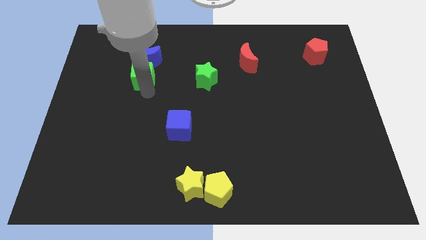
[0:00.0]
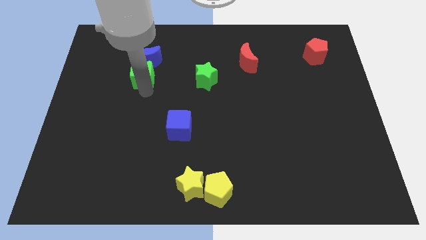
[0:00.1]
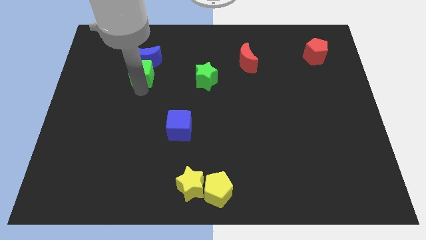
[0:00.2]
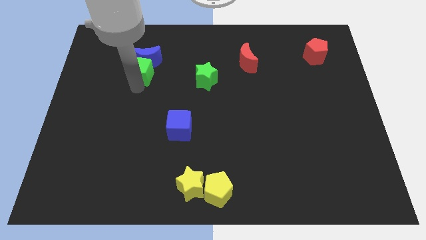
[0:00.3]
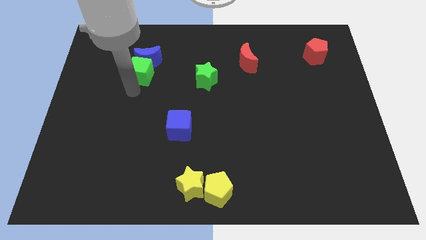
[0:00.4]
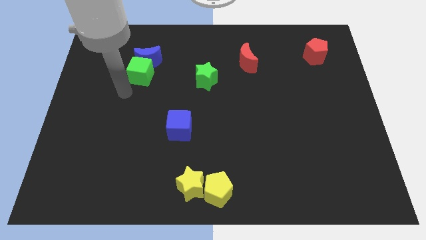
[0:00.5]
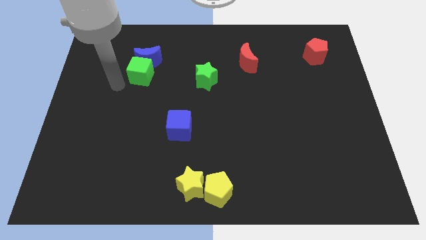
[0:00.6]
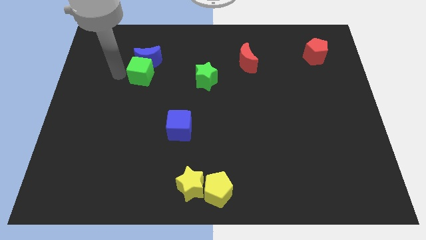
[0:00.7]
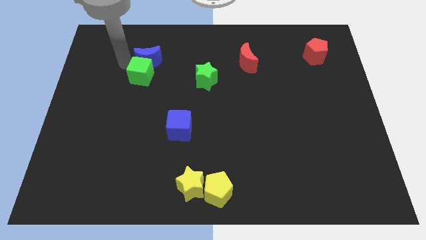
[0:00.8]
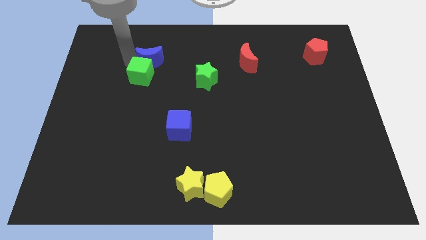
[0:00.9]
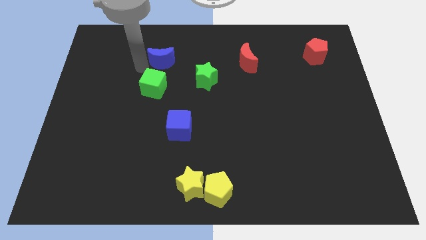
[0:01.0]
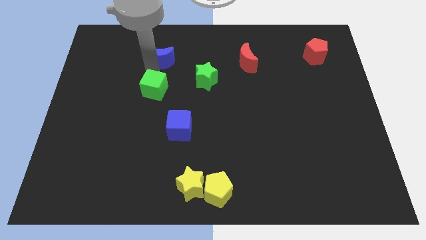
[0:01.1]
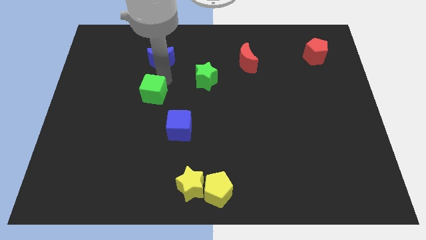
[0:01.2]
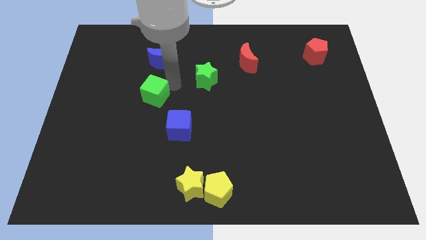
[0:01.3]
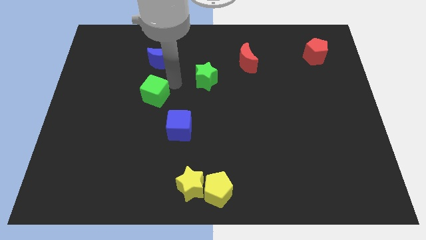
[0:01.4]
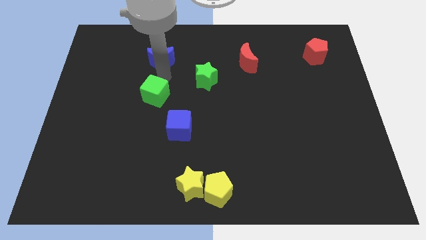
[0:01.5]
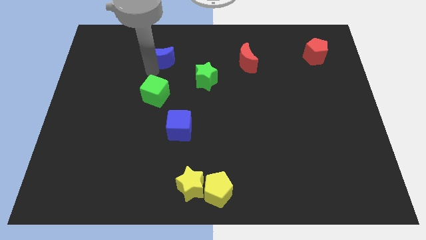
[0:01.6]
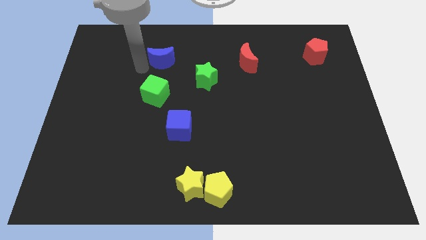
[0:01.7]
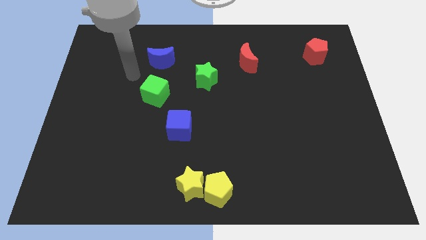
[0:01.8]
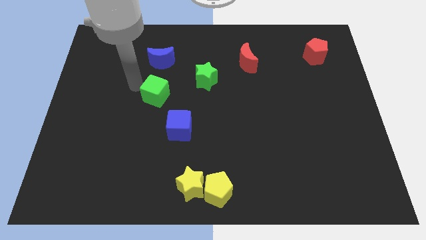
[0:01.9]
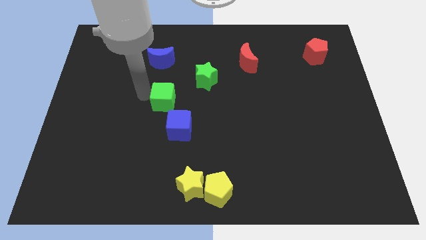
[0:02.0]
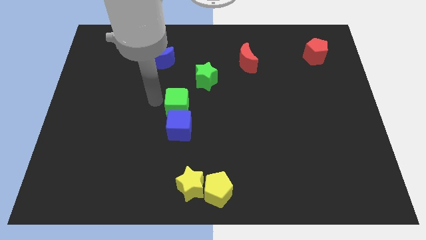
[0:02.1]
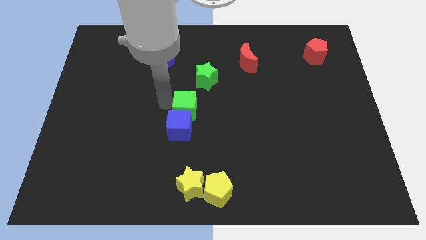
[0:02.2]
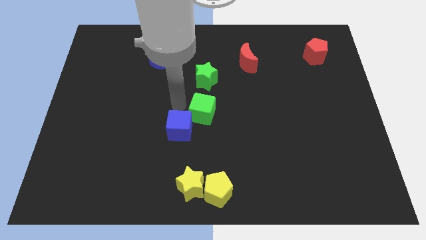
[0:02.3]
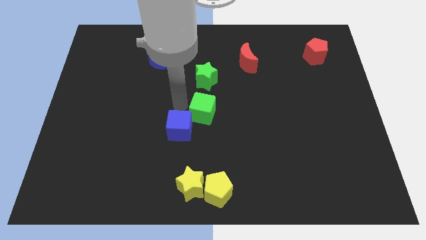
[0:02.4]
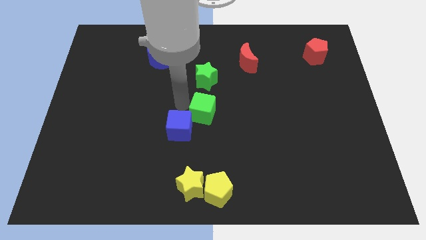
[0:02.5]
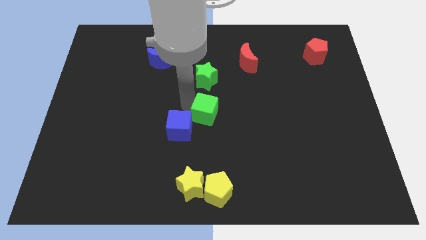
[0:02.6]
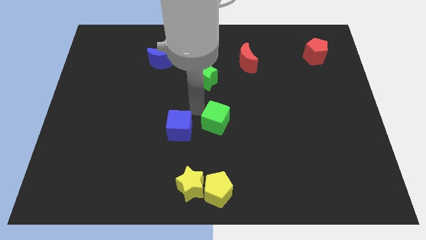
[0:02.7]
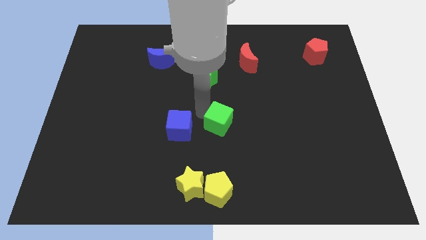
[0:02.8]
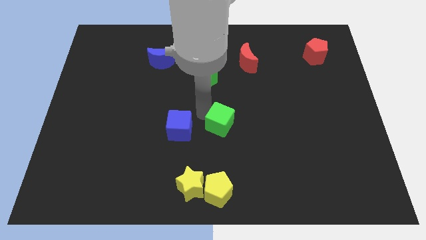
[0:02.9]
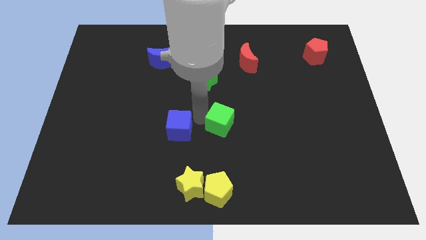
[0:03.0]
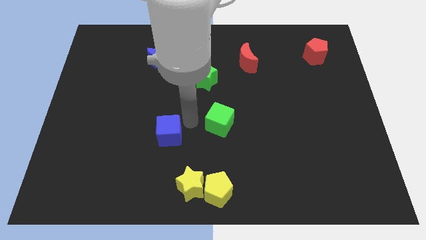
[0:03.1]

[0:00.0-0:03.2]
push the green cube vertically above the yellow pentagon

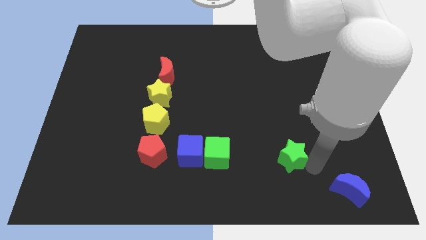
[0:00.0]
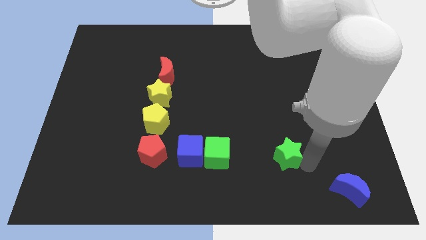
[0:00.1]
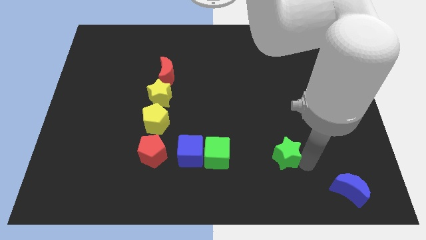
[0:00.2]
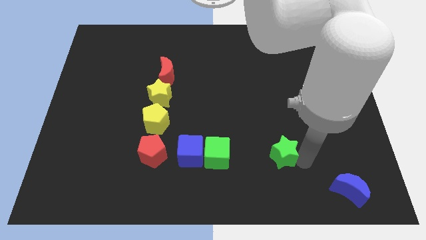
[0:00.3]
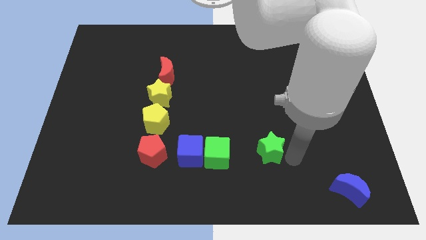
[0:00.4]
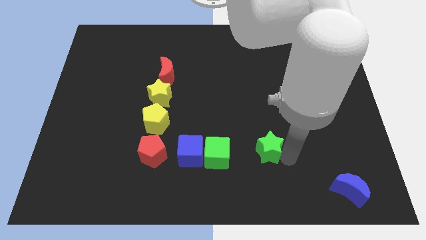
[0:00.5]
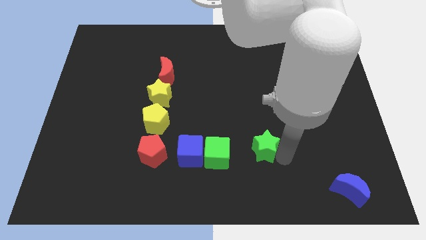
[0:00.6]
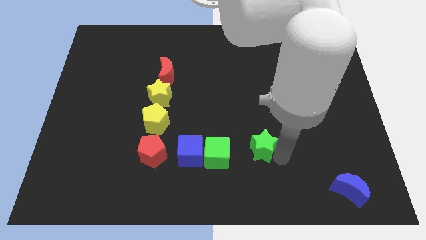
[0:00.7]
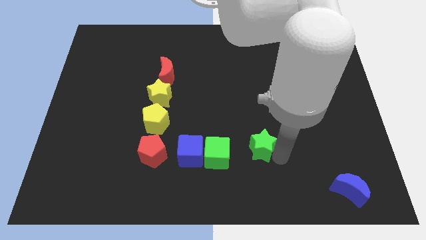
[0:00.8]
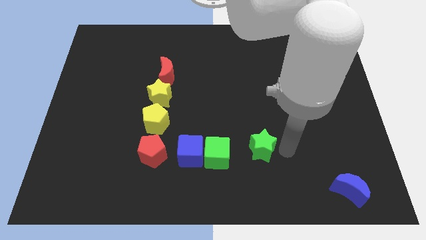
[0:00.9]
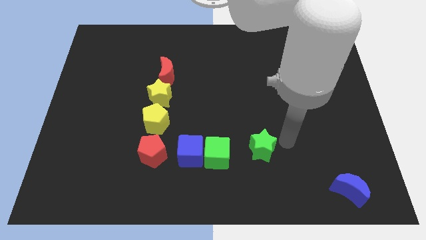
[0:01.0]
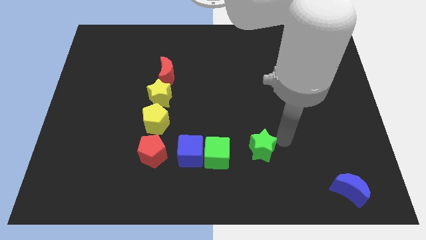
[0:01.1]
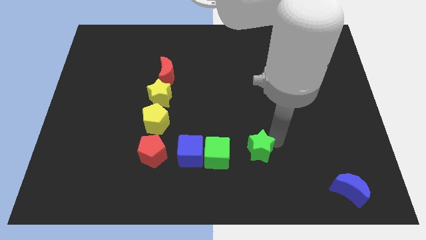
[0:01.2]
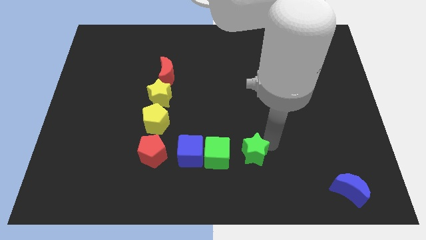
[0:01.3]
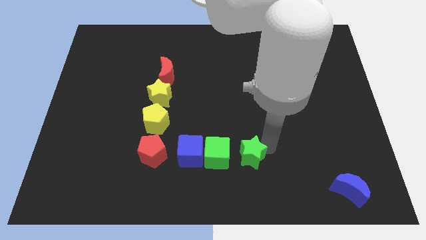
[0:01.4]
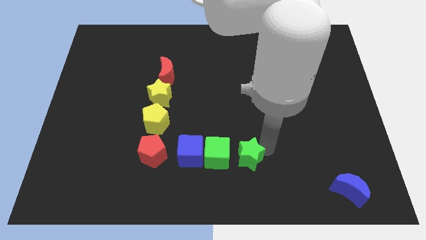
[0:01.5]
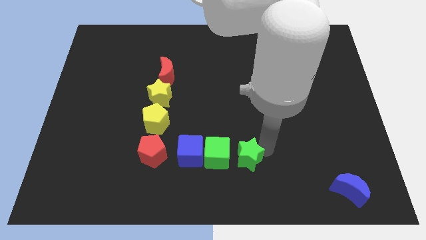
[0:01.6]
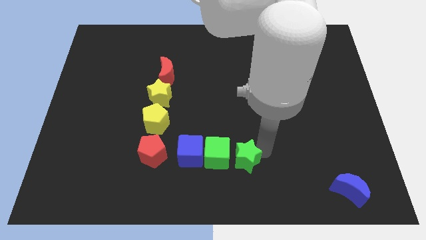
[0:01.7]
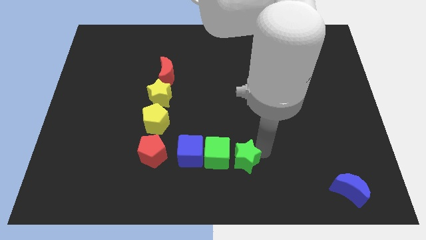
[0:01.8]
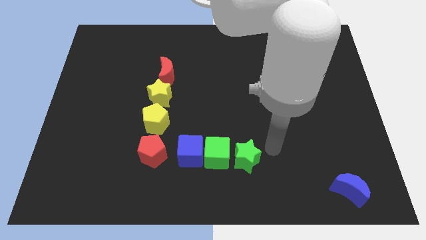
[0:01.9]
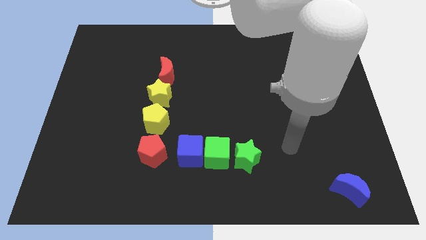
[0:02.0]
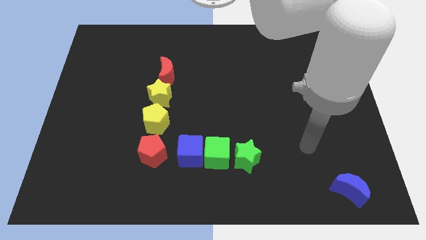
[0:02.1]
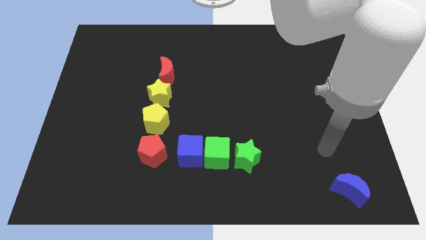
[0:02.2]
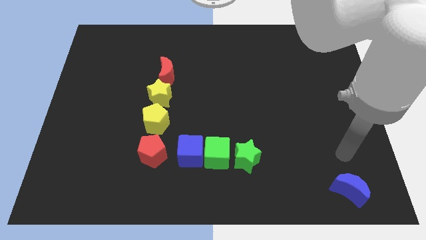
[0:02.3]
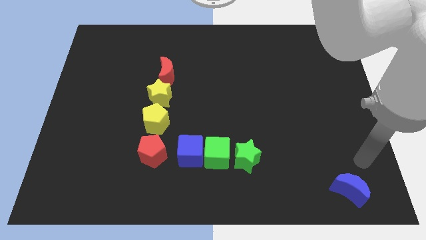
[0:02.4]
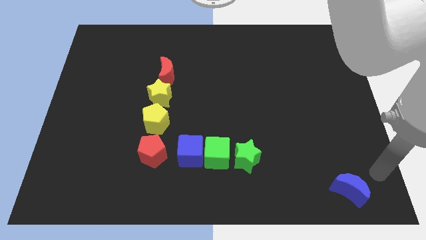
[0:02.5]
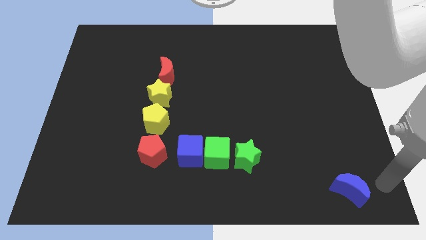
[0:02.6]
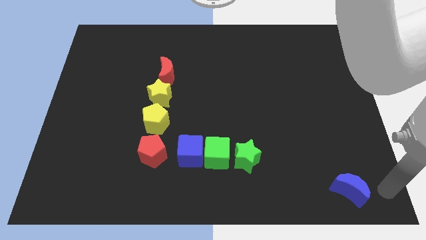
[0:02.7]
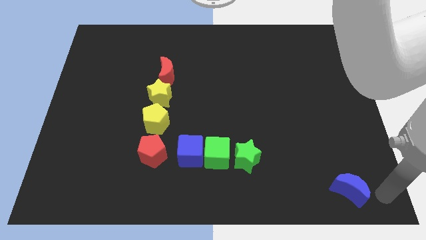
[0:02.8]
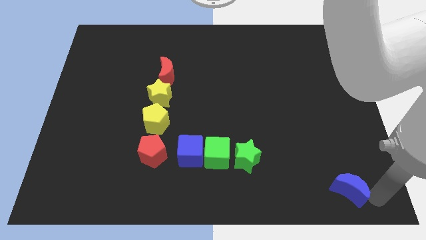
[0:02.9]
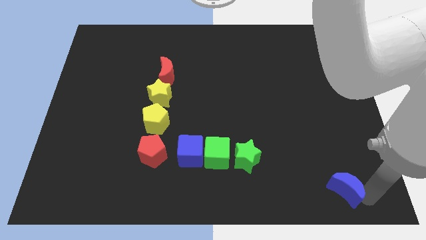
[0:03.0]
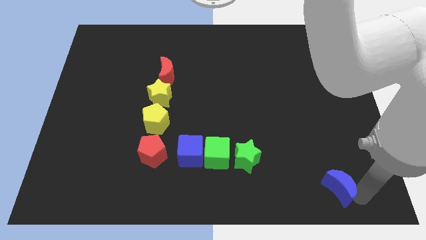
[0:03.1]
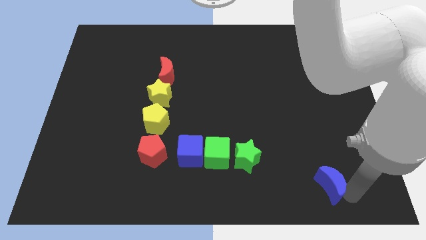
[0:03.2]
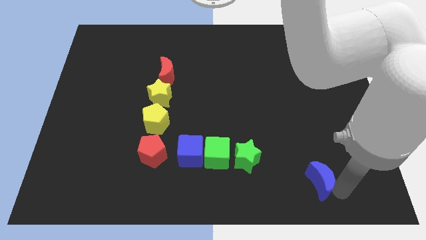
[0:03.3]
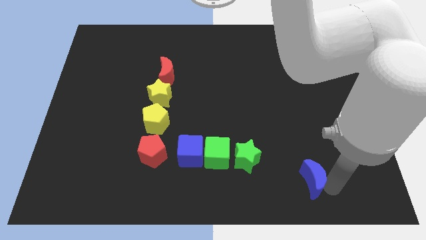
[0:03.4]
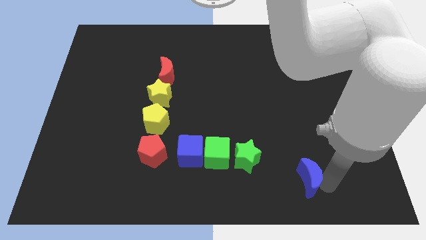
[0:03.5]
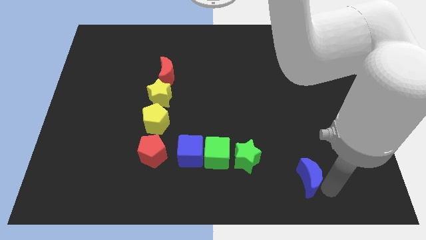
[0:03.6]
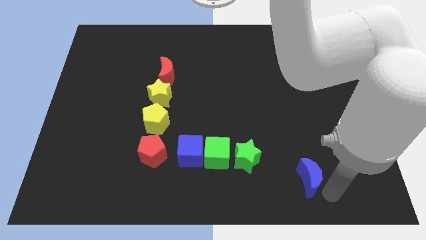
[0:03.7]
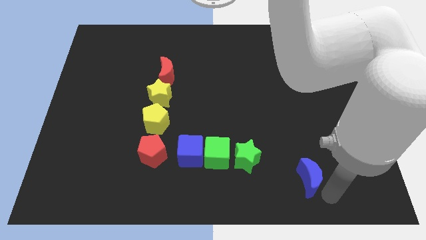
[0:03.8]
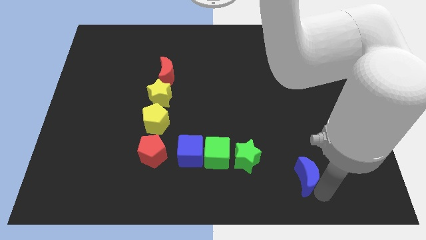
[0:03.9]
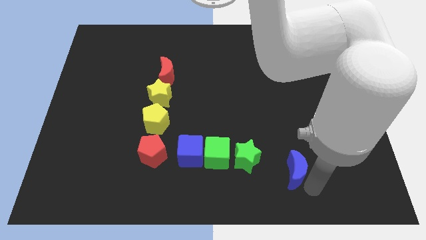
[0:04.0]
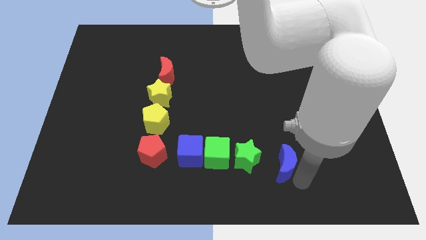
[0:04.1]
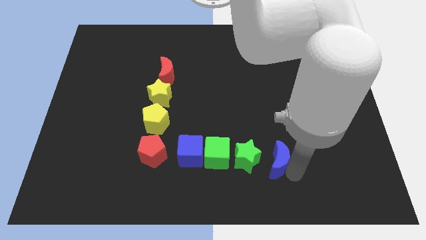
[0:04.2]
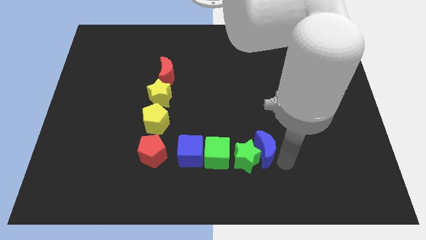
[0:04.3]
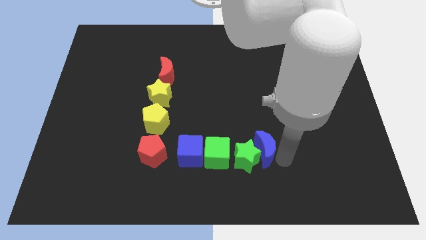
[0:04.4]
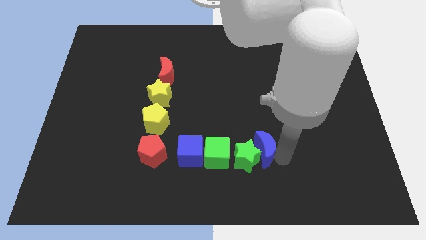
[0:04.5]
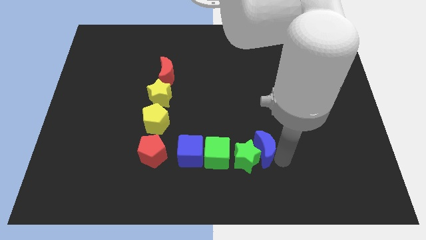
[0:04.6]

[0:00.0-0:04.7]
move blue moon into the green star

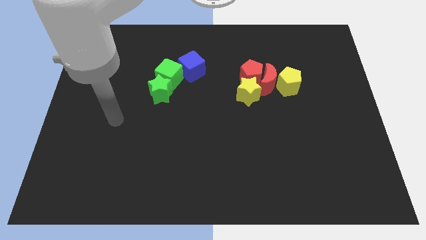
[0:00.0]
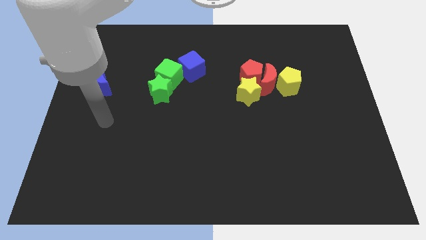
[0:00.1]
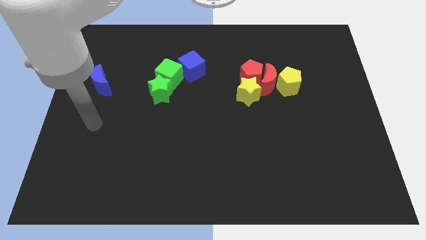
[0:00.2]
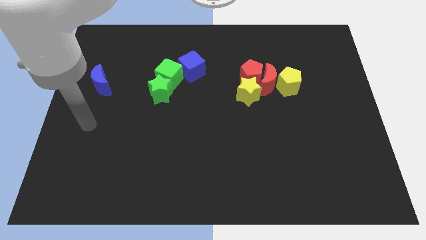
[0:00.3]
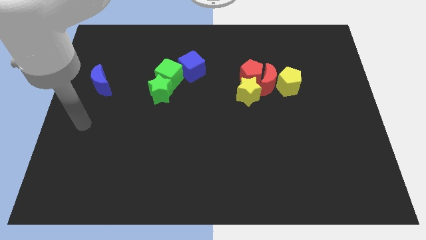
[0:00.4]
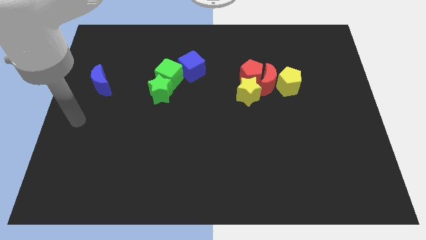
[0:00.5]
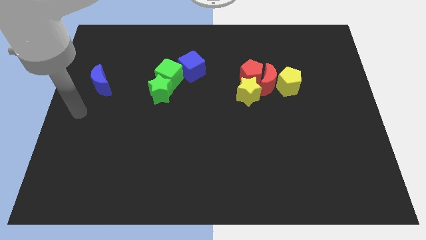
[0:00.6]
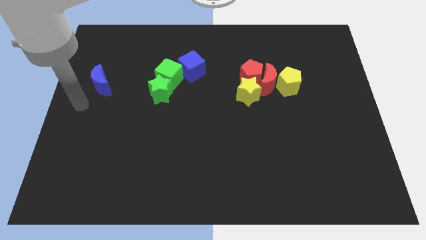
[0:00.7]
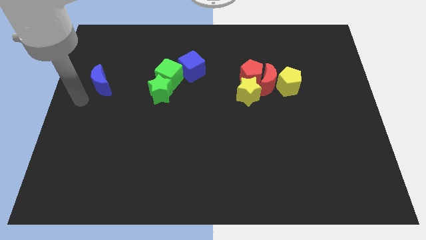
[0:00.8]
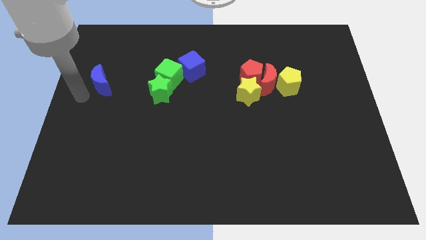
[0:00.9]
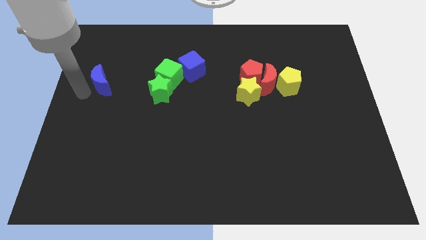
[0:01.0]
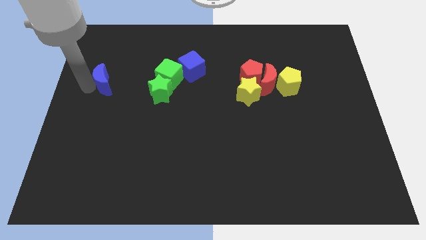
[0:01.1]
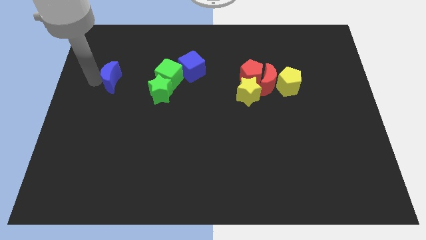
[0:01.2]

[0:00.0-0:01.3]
push the blue moon slightly towards the group of green blocks
